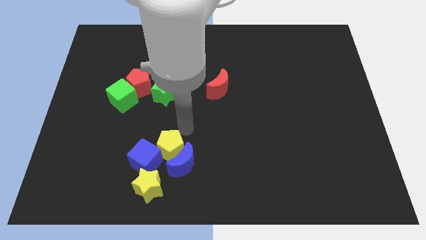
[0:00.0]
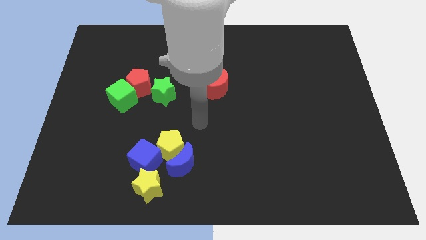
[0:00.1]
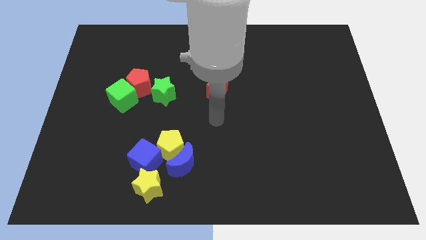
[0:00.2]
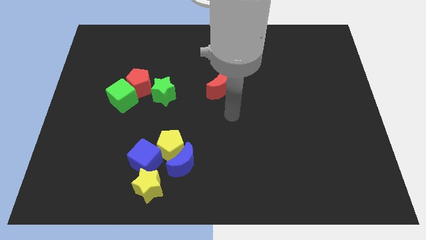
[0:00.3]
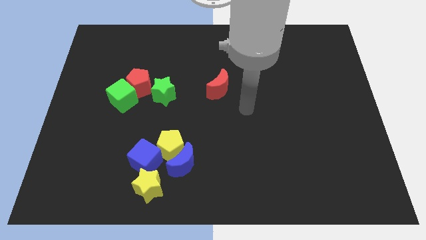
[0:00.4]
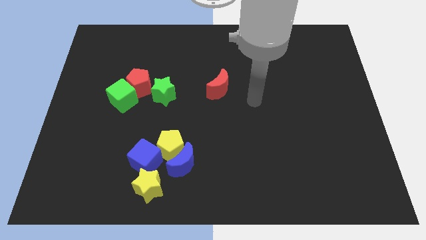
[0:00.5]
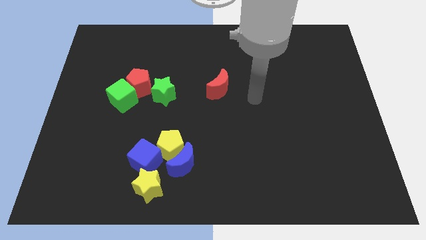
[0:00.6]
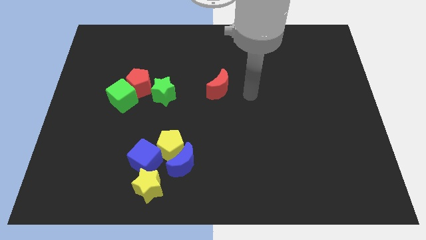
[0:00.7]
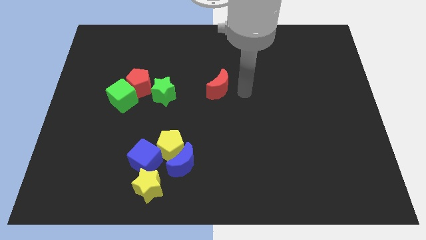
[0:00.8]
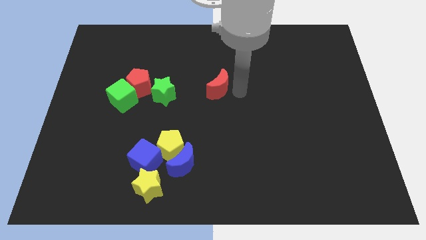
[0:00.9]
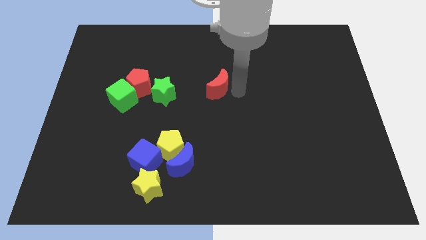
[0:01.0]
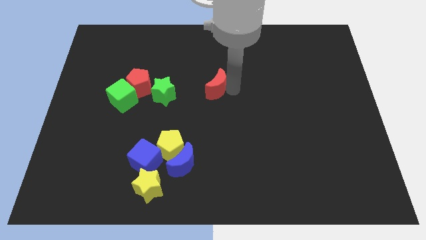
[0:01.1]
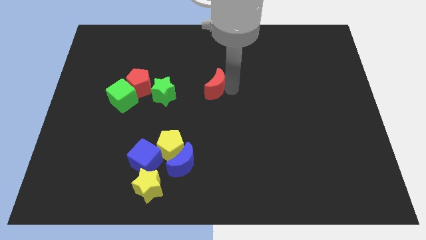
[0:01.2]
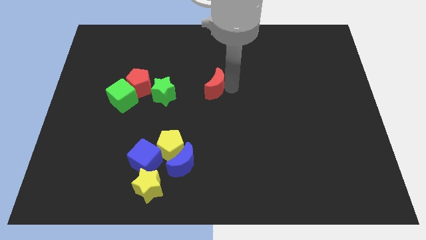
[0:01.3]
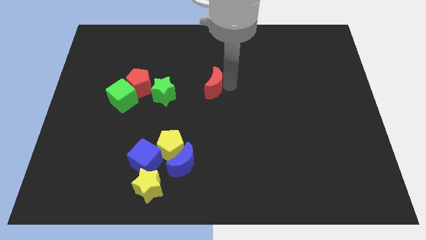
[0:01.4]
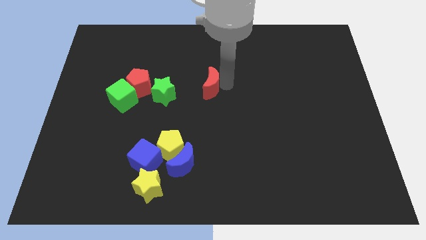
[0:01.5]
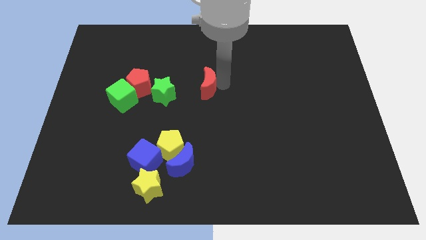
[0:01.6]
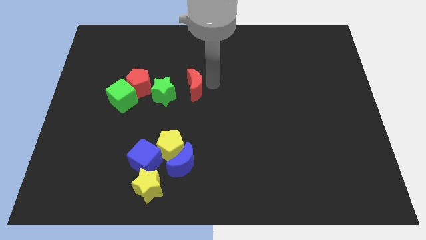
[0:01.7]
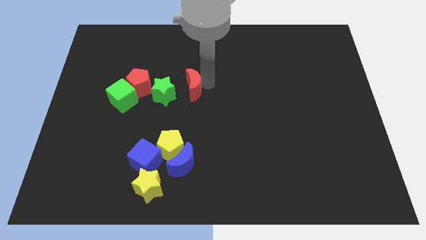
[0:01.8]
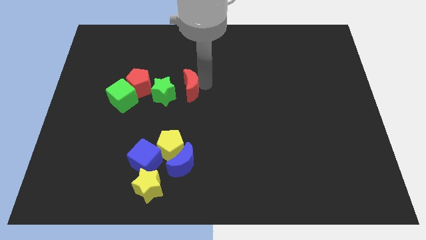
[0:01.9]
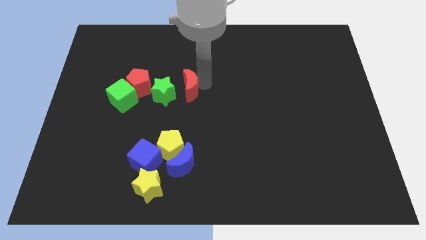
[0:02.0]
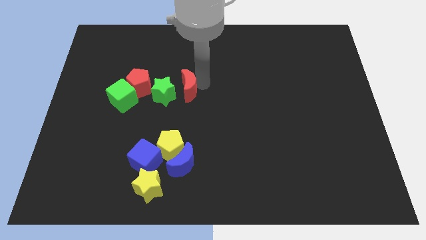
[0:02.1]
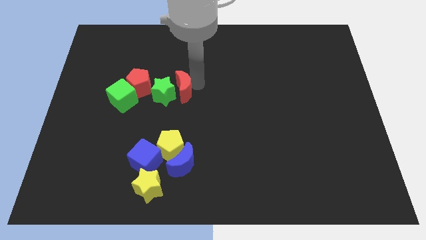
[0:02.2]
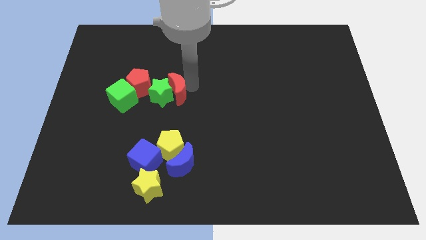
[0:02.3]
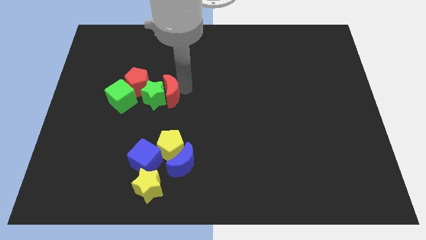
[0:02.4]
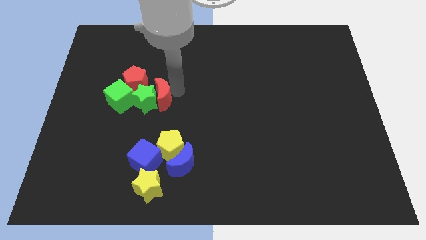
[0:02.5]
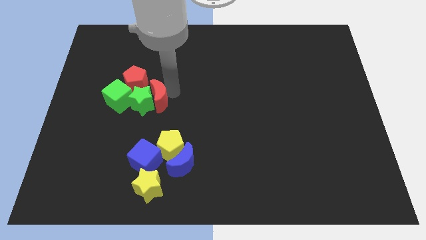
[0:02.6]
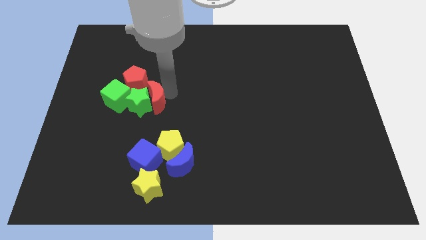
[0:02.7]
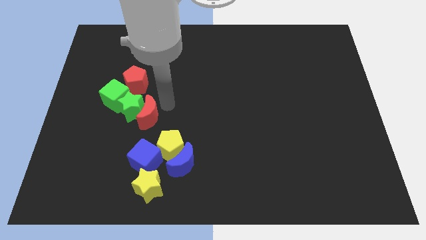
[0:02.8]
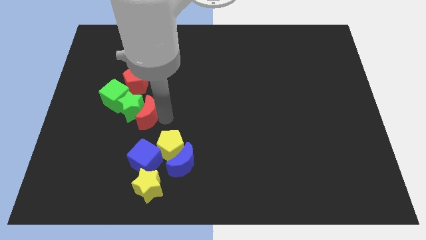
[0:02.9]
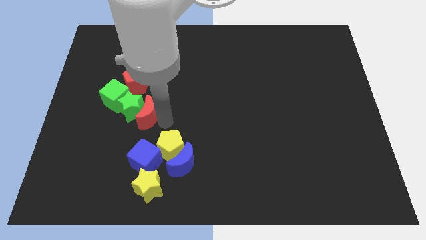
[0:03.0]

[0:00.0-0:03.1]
push the red moon into the right side of the green star

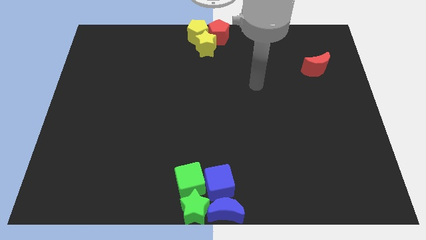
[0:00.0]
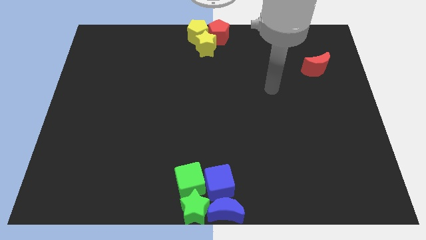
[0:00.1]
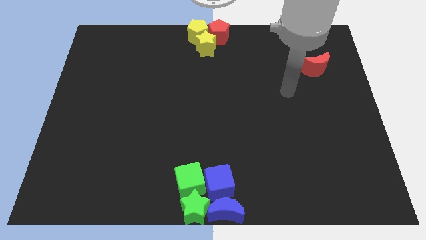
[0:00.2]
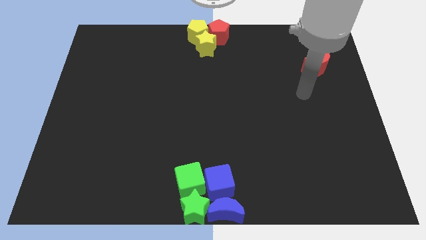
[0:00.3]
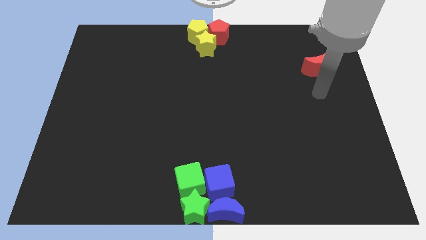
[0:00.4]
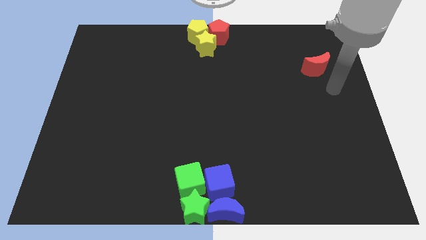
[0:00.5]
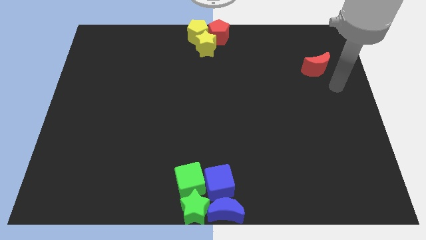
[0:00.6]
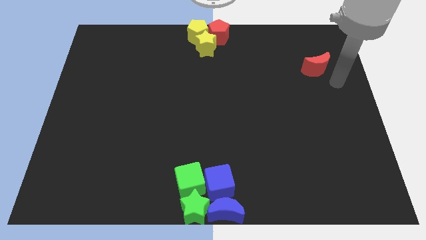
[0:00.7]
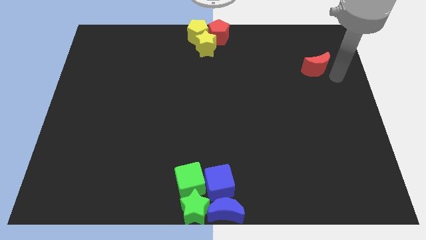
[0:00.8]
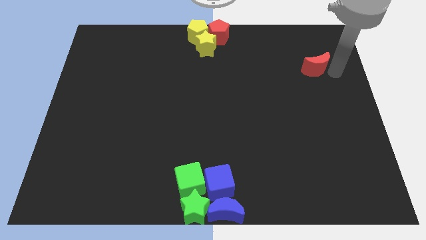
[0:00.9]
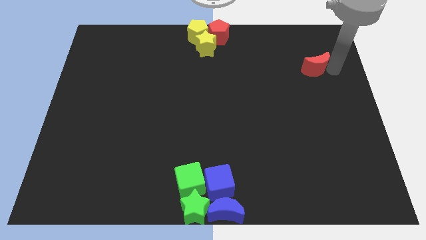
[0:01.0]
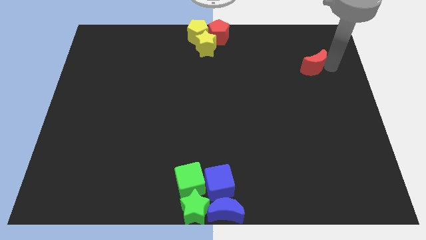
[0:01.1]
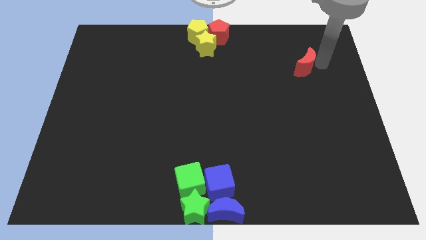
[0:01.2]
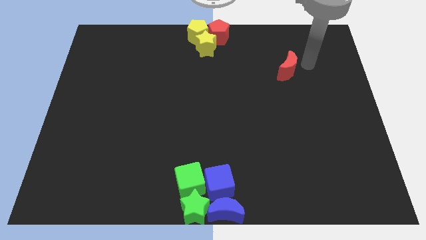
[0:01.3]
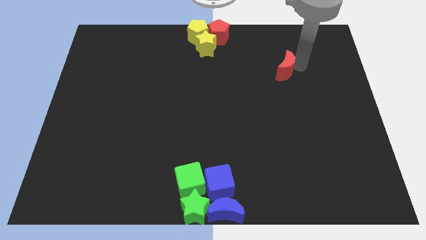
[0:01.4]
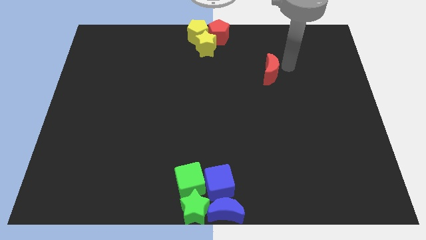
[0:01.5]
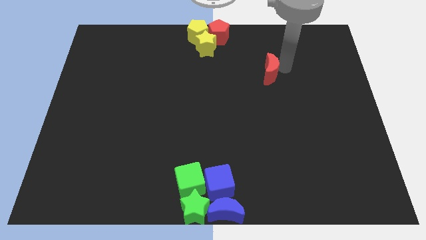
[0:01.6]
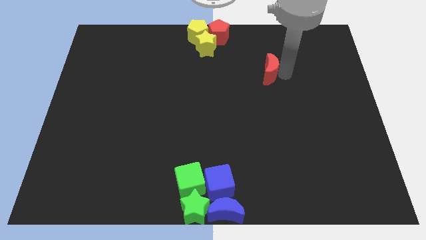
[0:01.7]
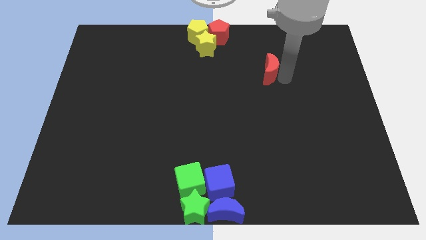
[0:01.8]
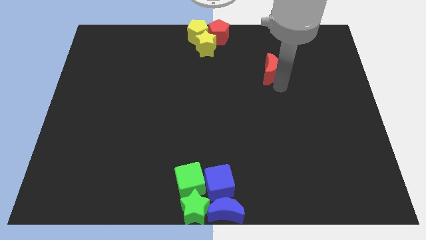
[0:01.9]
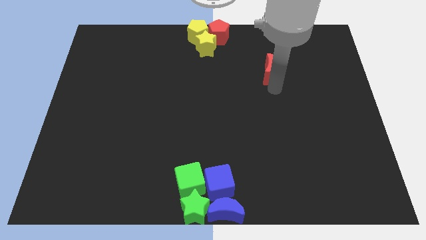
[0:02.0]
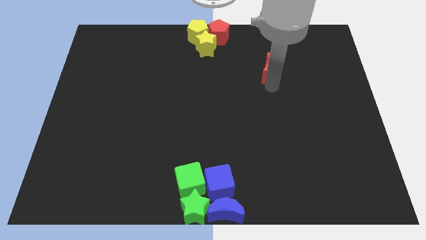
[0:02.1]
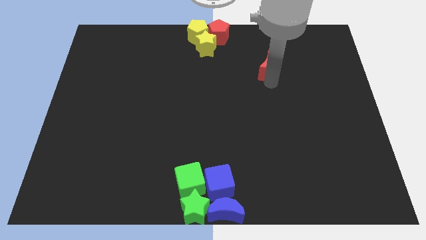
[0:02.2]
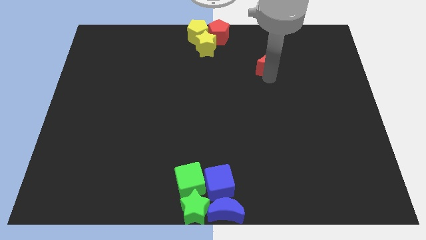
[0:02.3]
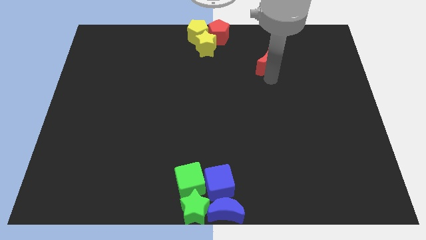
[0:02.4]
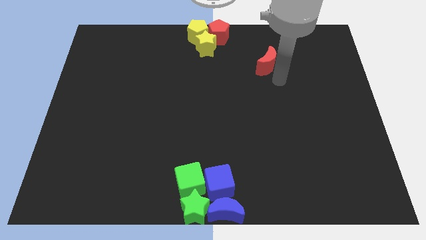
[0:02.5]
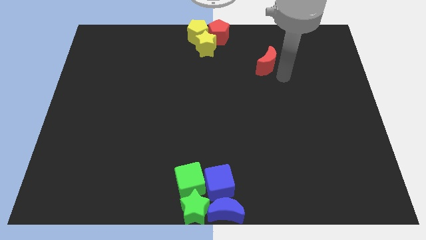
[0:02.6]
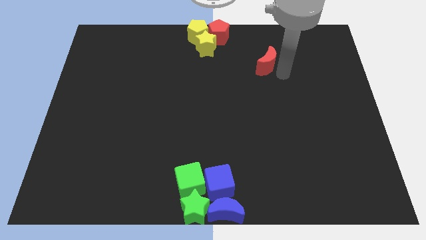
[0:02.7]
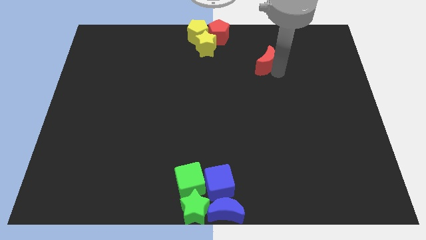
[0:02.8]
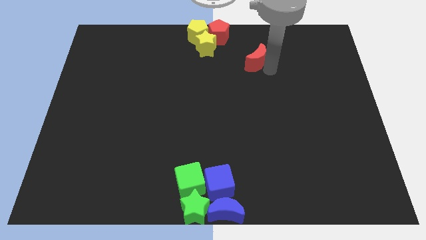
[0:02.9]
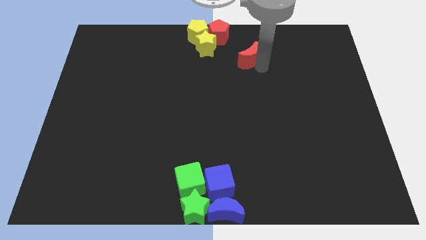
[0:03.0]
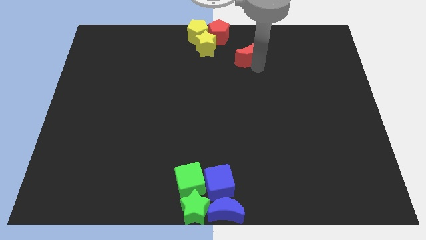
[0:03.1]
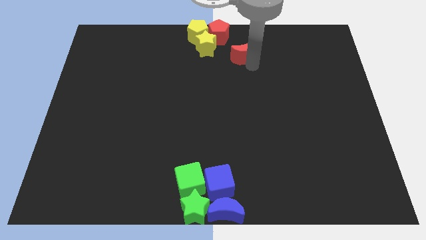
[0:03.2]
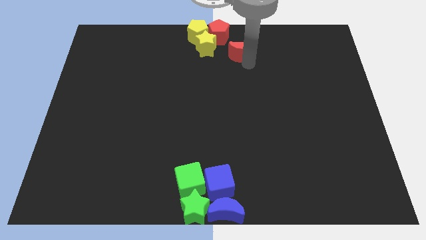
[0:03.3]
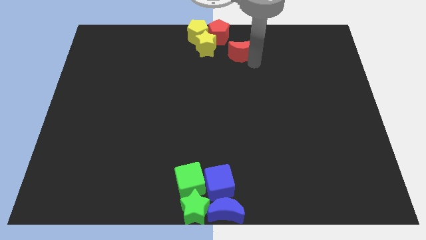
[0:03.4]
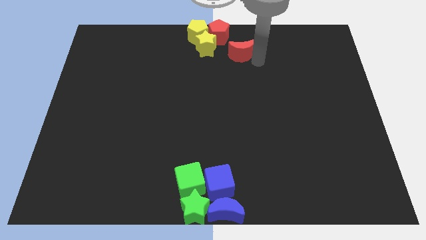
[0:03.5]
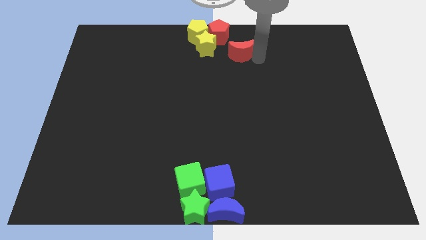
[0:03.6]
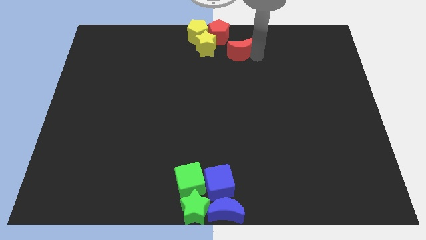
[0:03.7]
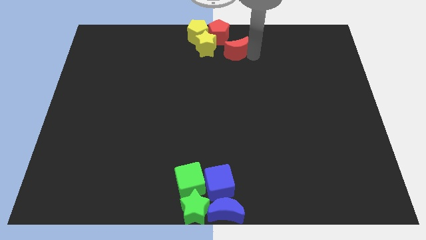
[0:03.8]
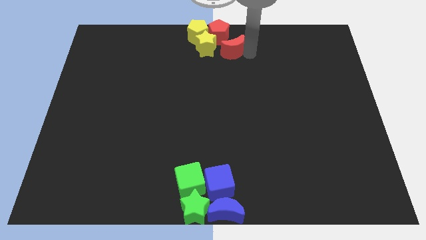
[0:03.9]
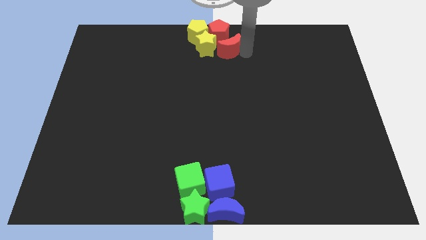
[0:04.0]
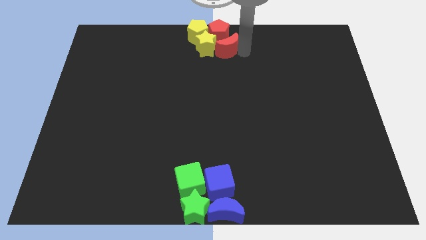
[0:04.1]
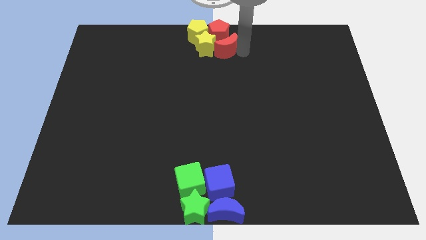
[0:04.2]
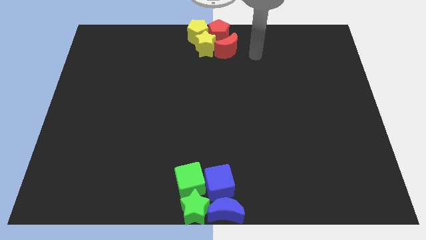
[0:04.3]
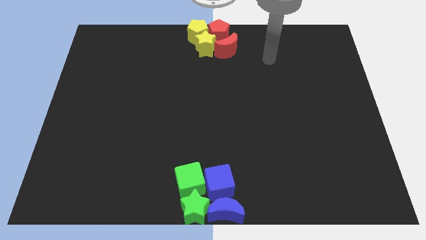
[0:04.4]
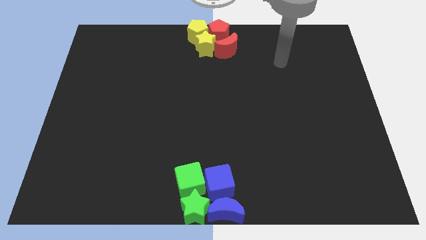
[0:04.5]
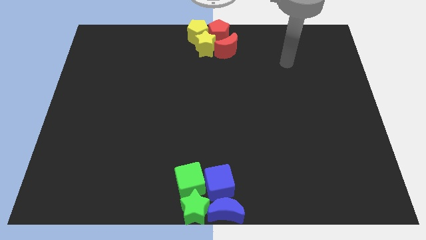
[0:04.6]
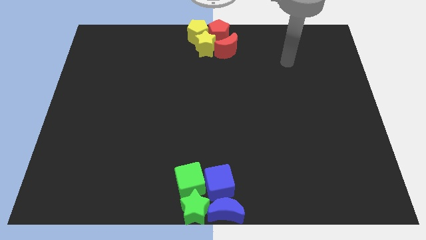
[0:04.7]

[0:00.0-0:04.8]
put the red crescent on the right side of the yellow star

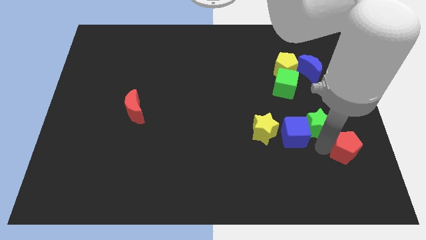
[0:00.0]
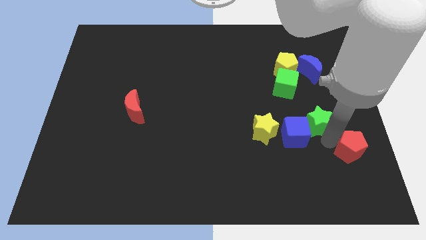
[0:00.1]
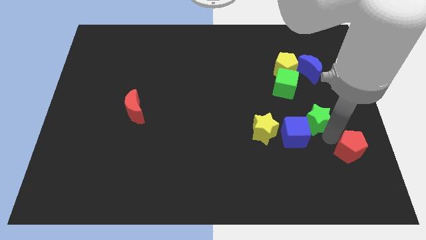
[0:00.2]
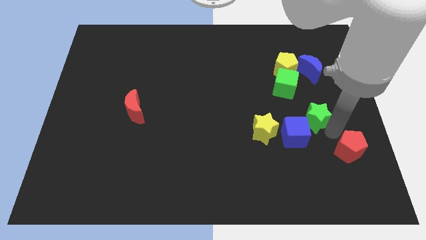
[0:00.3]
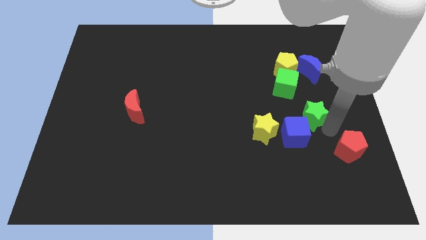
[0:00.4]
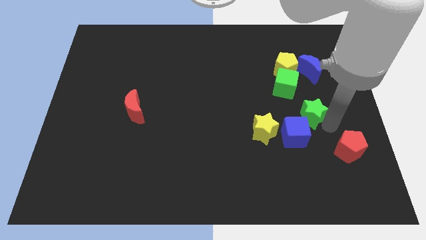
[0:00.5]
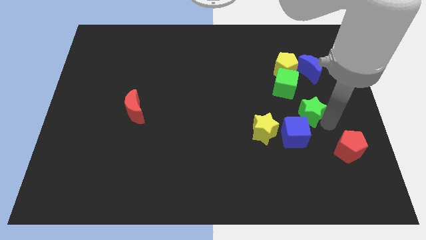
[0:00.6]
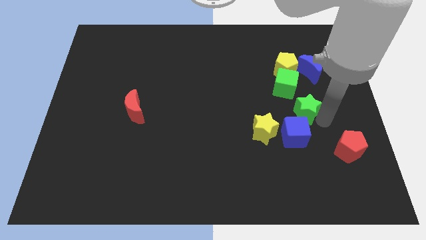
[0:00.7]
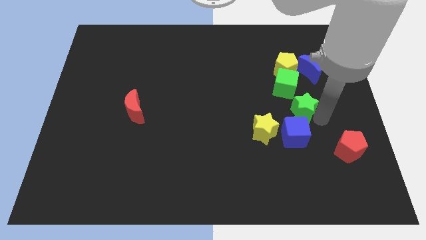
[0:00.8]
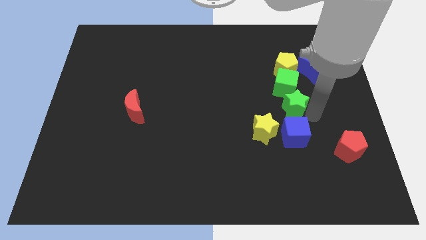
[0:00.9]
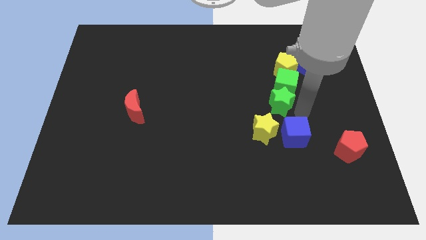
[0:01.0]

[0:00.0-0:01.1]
place the green star in between green cube and yellow star
